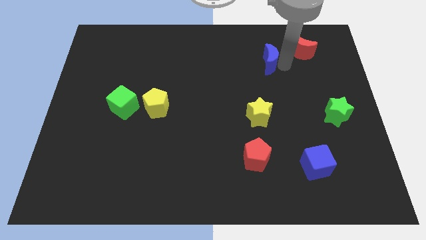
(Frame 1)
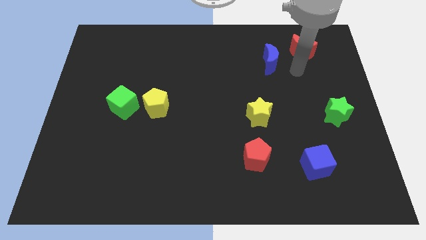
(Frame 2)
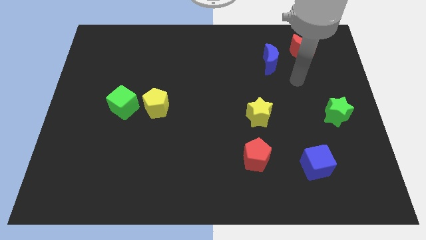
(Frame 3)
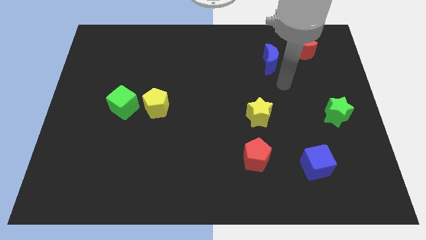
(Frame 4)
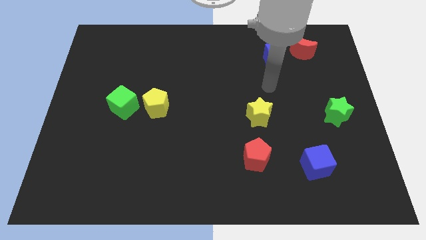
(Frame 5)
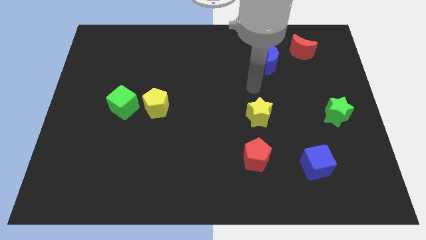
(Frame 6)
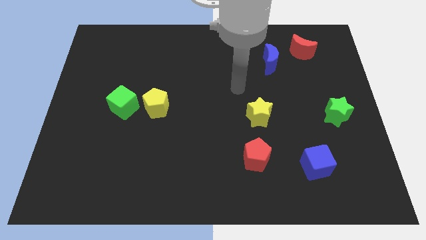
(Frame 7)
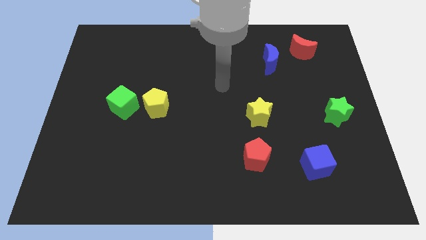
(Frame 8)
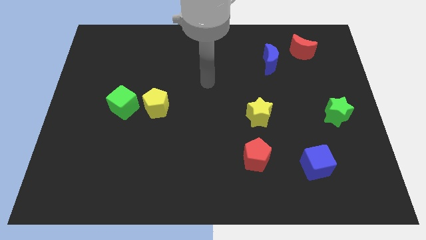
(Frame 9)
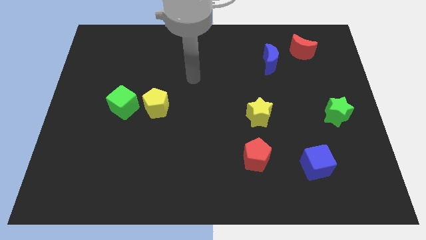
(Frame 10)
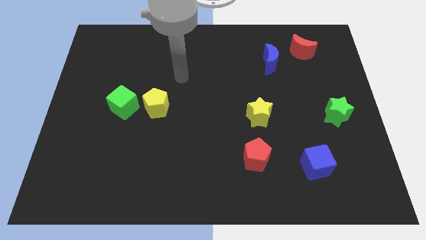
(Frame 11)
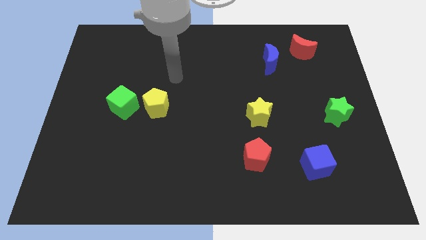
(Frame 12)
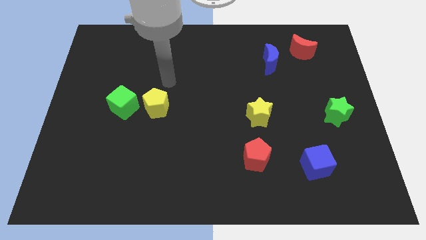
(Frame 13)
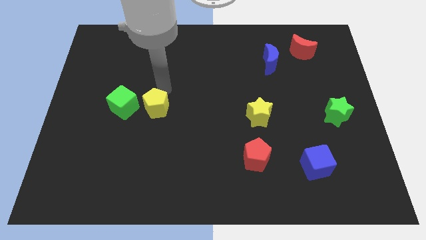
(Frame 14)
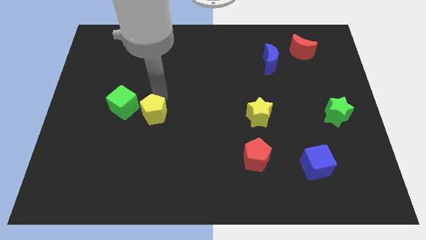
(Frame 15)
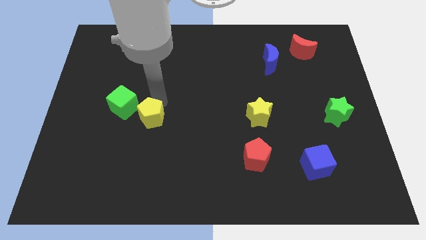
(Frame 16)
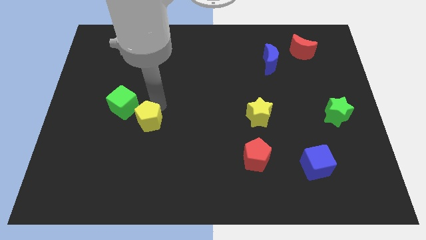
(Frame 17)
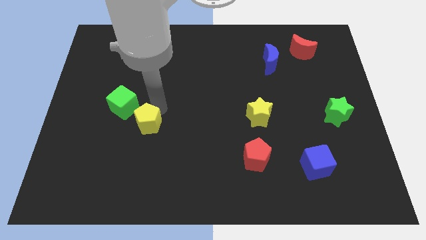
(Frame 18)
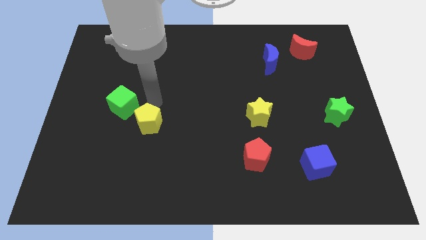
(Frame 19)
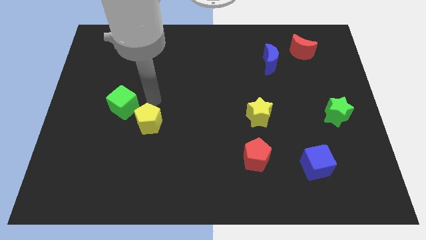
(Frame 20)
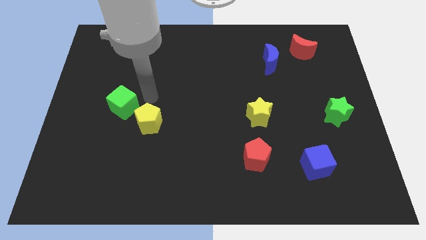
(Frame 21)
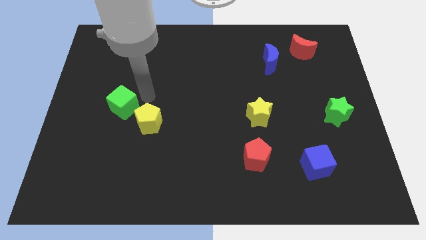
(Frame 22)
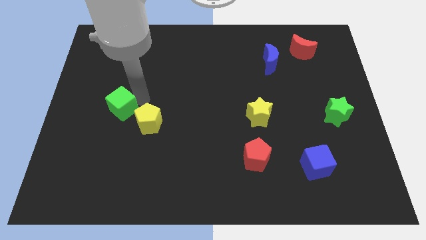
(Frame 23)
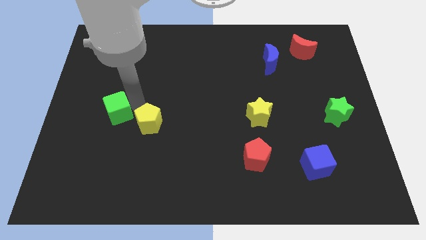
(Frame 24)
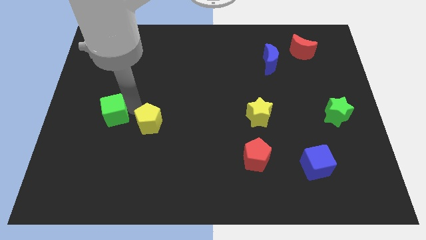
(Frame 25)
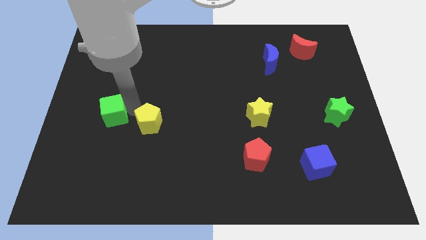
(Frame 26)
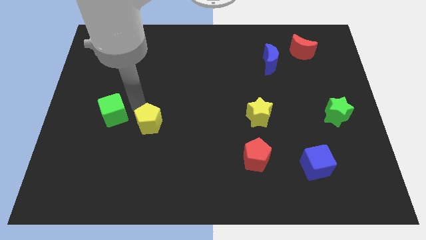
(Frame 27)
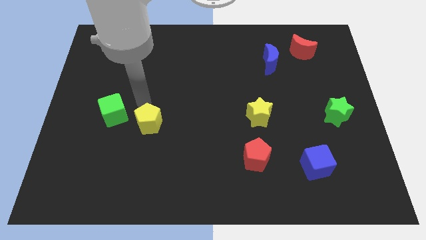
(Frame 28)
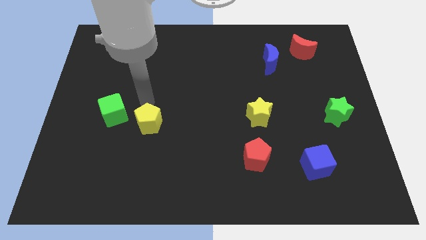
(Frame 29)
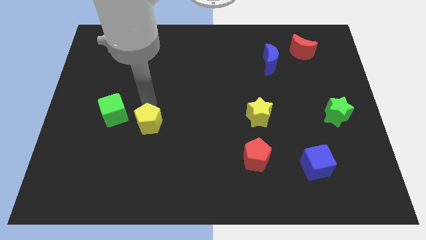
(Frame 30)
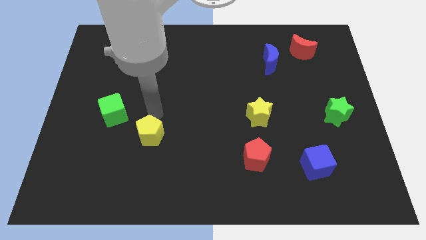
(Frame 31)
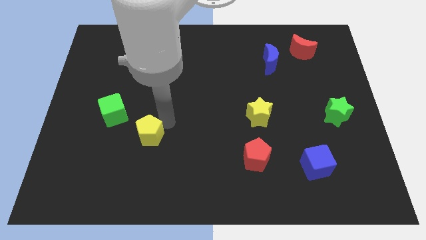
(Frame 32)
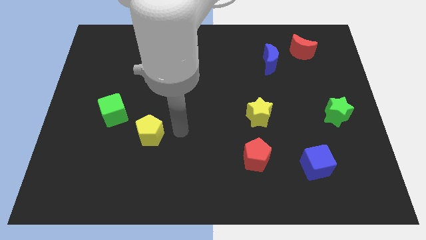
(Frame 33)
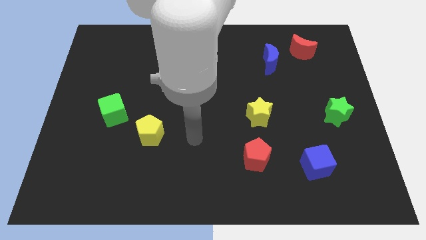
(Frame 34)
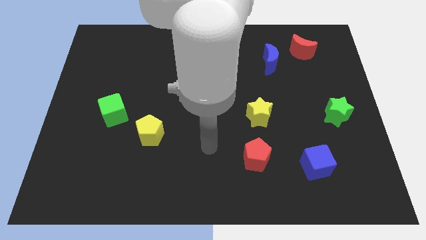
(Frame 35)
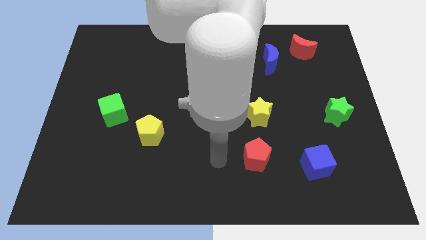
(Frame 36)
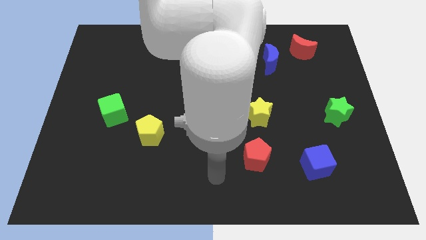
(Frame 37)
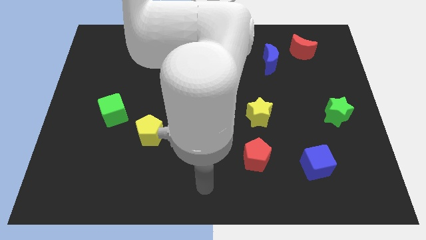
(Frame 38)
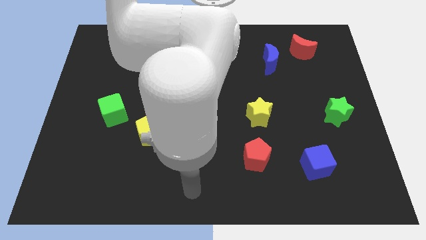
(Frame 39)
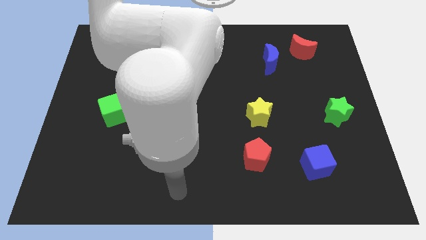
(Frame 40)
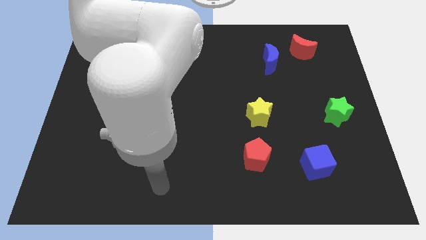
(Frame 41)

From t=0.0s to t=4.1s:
place yellow pentagon to the bottom right of green cube

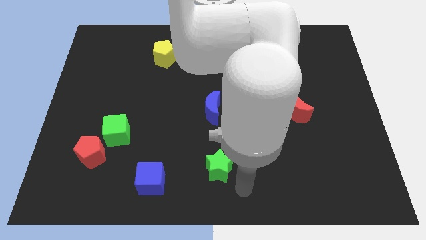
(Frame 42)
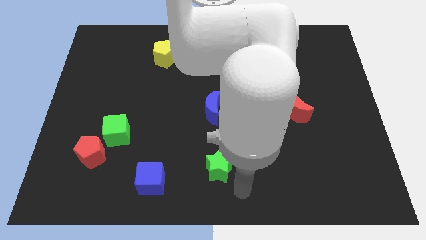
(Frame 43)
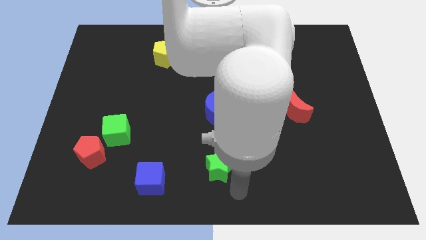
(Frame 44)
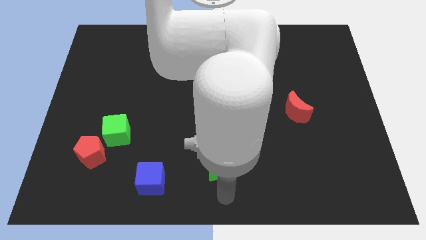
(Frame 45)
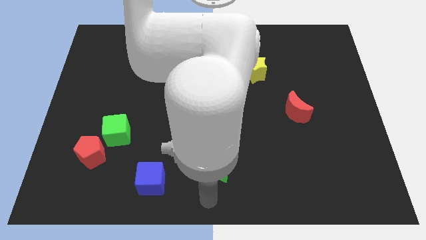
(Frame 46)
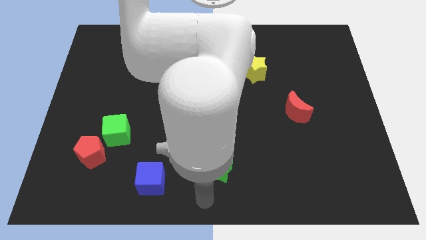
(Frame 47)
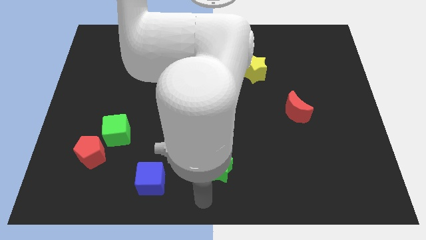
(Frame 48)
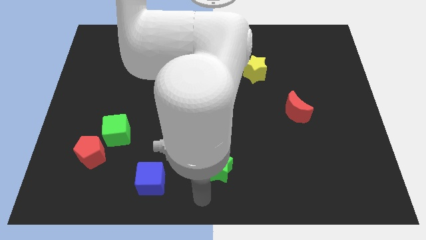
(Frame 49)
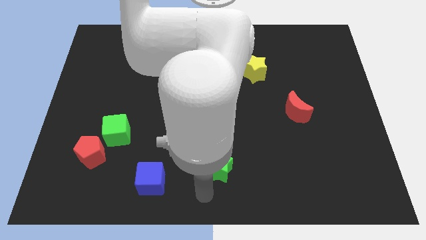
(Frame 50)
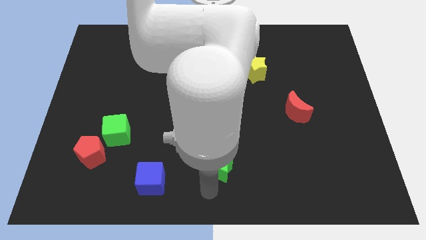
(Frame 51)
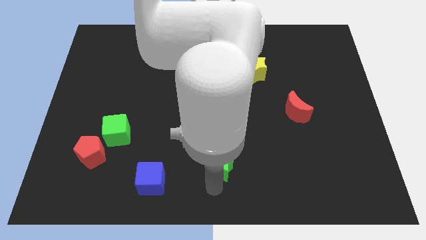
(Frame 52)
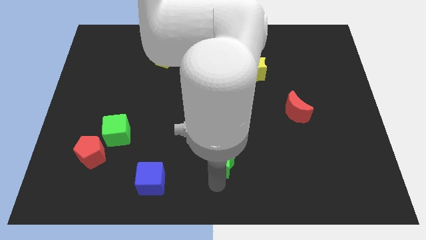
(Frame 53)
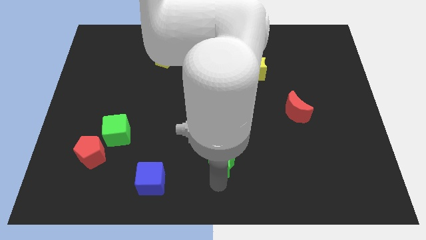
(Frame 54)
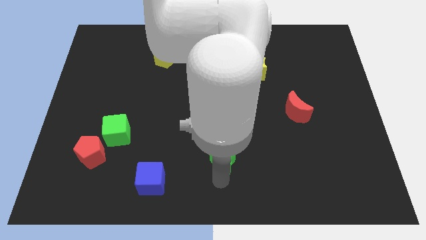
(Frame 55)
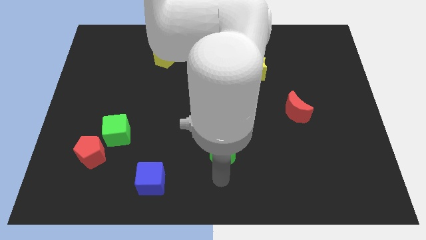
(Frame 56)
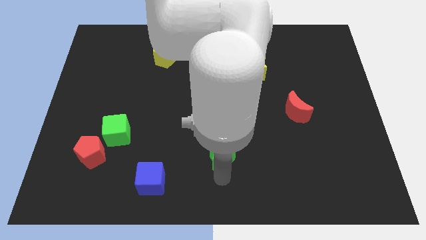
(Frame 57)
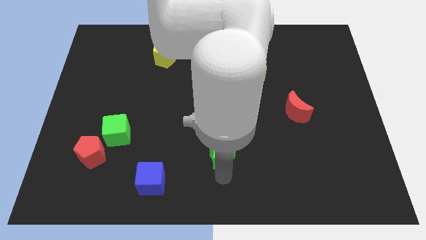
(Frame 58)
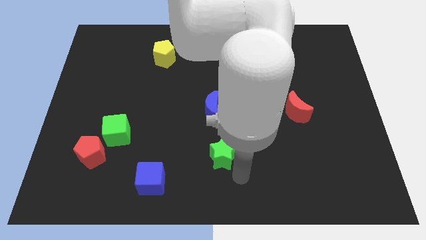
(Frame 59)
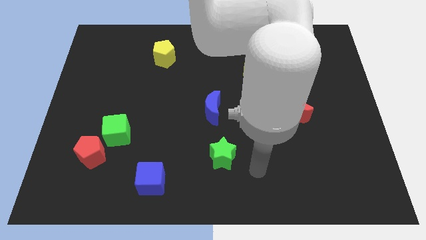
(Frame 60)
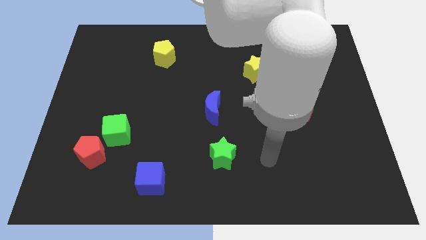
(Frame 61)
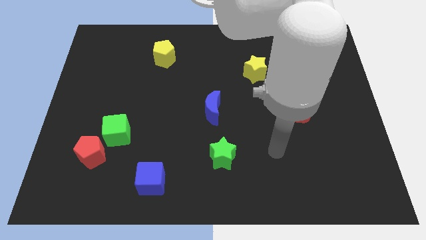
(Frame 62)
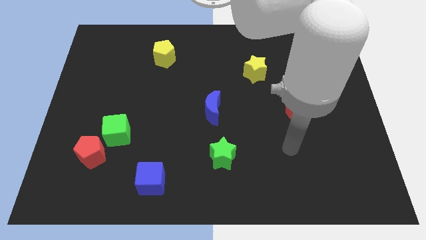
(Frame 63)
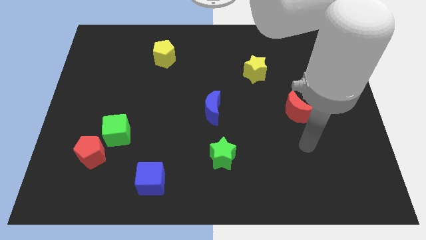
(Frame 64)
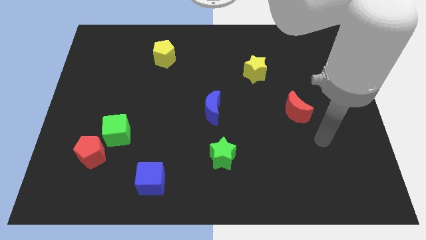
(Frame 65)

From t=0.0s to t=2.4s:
push the green star up slightly

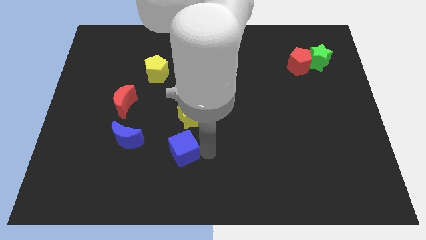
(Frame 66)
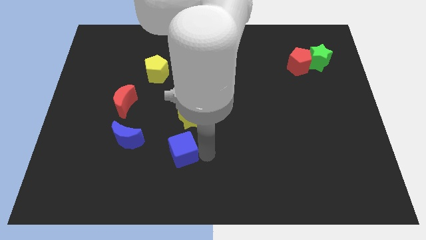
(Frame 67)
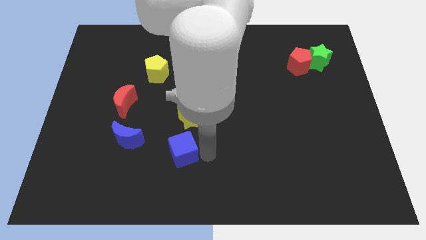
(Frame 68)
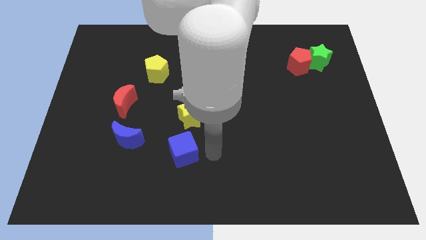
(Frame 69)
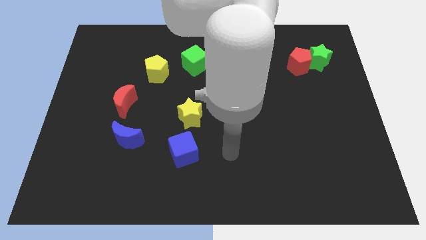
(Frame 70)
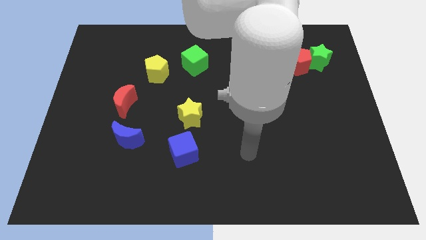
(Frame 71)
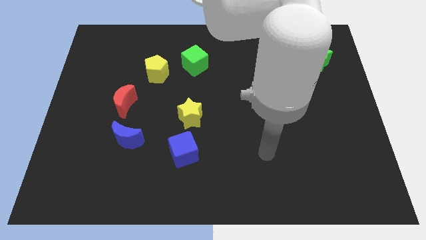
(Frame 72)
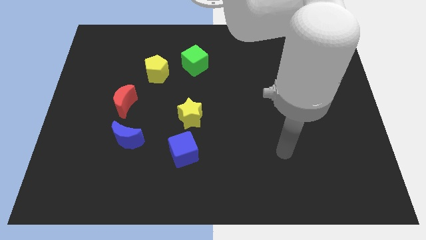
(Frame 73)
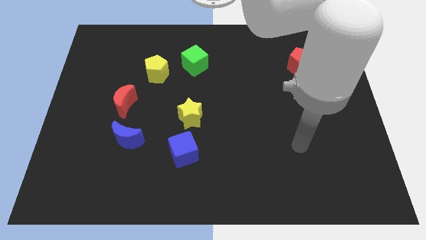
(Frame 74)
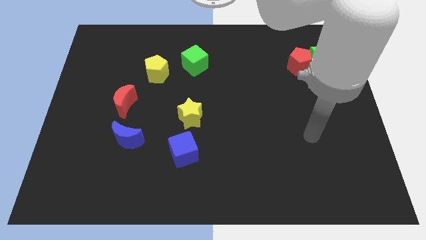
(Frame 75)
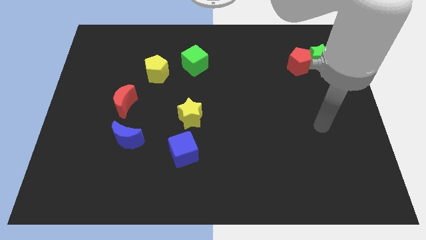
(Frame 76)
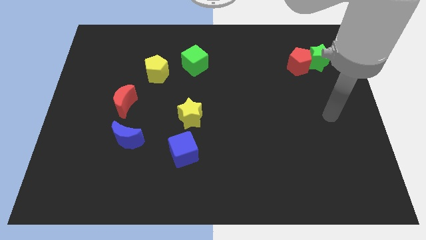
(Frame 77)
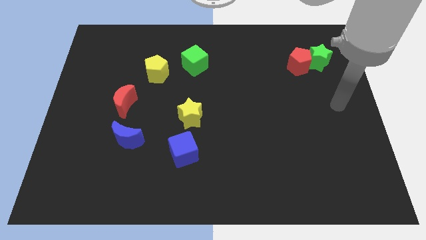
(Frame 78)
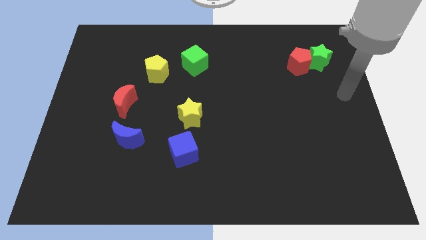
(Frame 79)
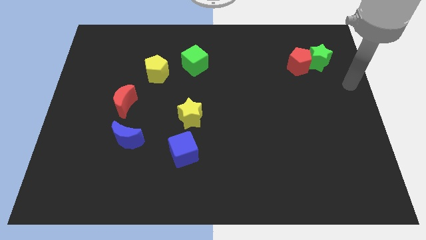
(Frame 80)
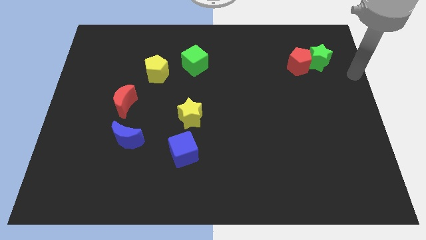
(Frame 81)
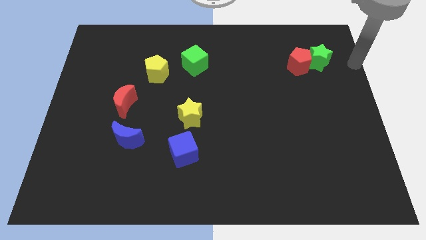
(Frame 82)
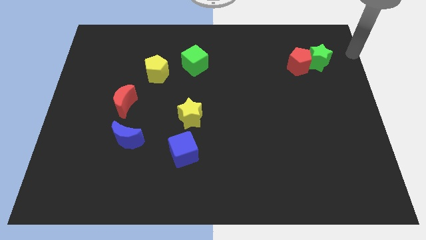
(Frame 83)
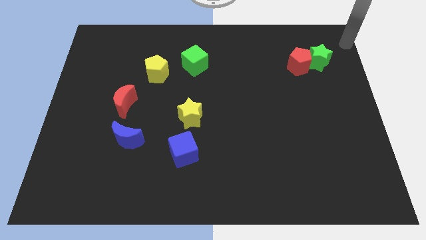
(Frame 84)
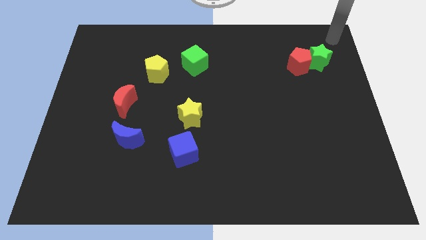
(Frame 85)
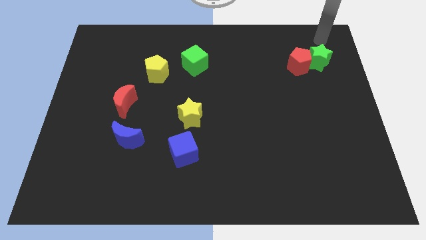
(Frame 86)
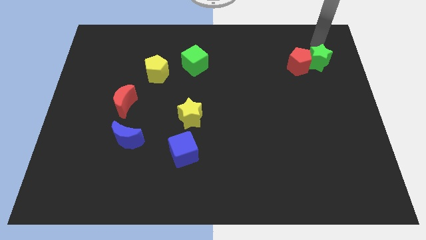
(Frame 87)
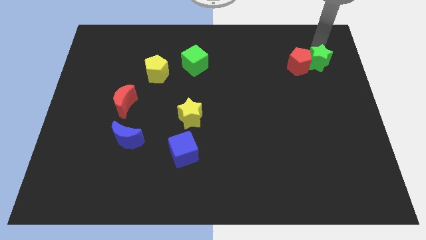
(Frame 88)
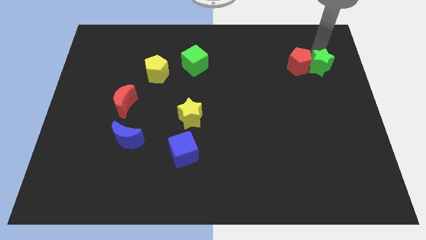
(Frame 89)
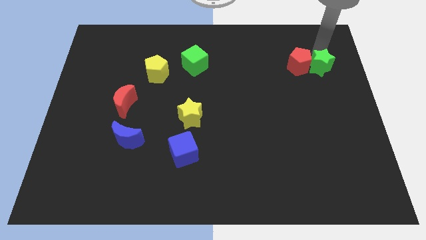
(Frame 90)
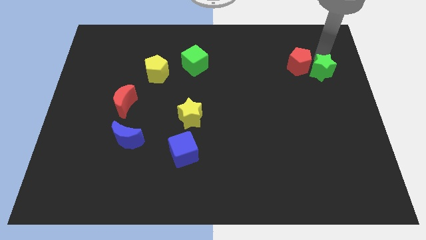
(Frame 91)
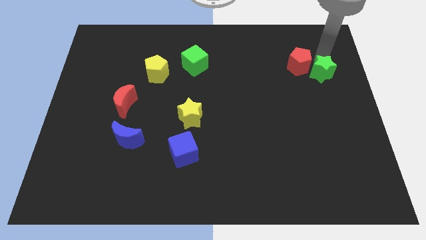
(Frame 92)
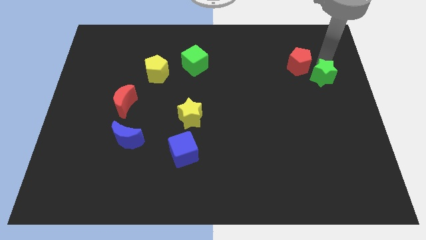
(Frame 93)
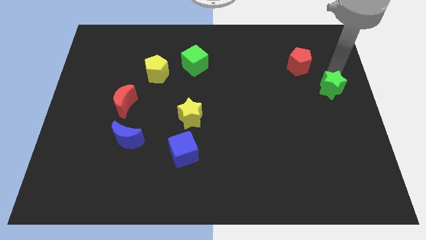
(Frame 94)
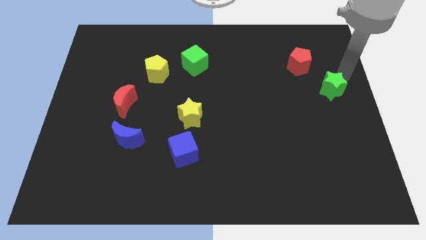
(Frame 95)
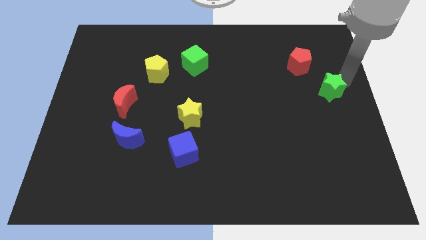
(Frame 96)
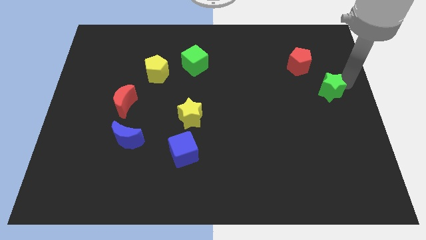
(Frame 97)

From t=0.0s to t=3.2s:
push the green star to the bottom side
